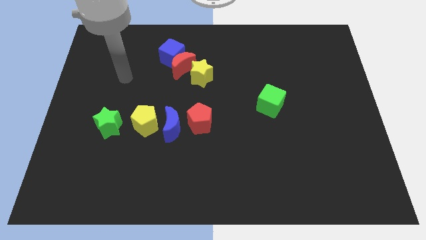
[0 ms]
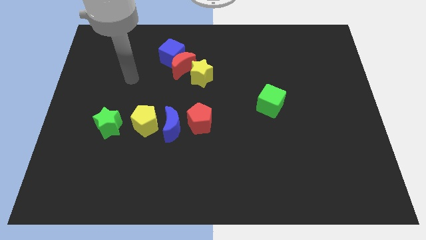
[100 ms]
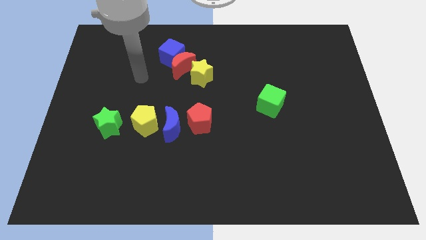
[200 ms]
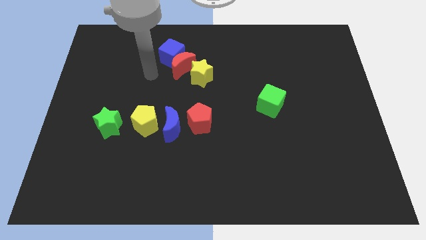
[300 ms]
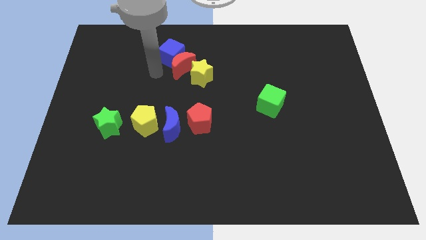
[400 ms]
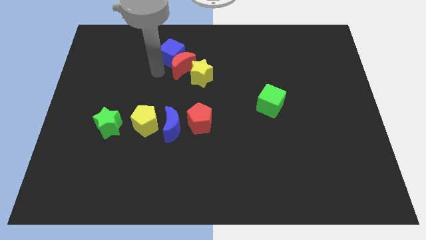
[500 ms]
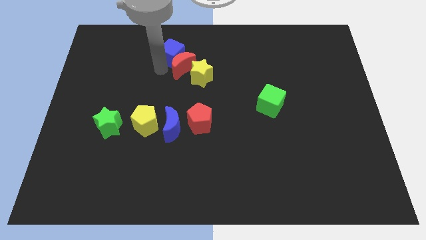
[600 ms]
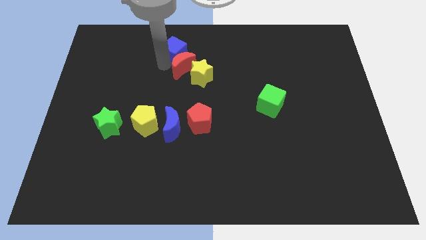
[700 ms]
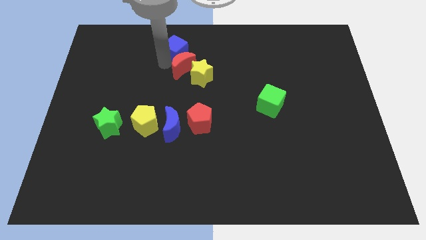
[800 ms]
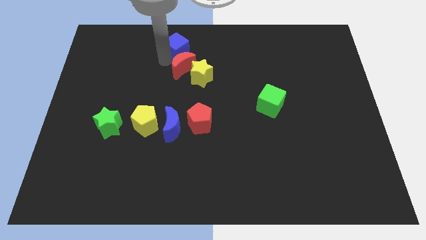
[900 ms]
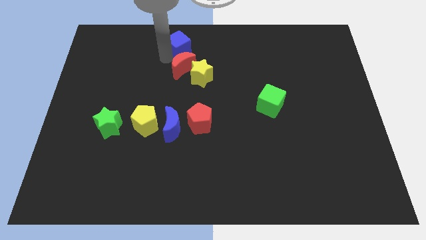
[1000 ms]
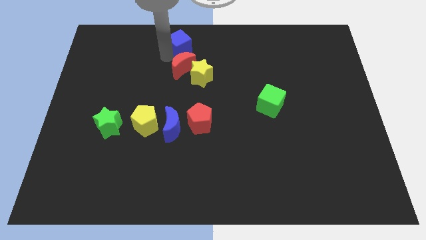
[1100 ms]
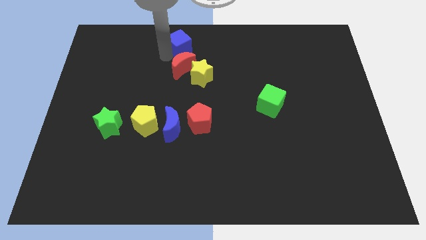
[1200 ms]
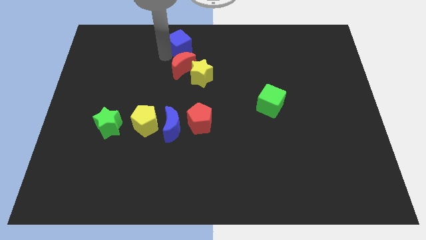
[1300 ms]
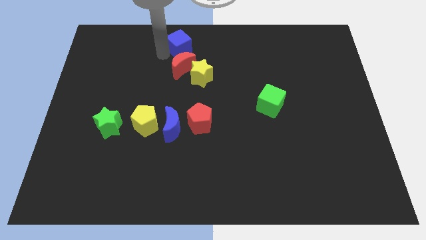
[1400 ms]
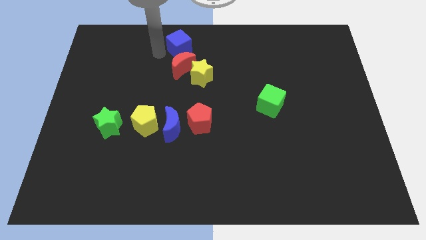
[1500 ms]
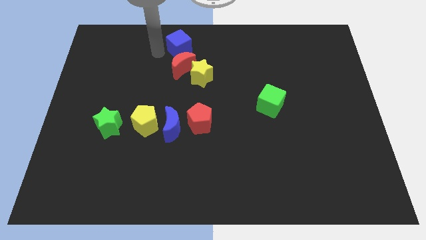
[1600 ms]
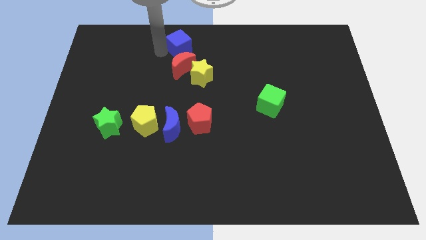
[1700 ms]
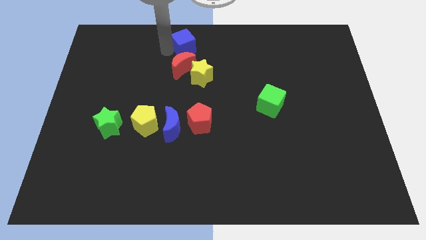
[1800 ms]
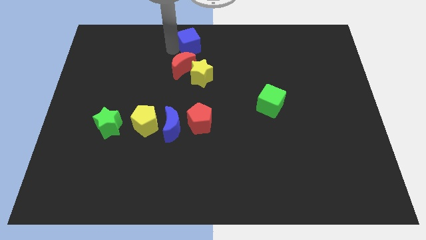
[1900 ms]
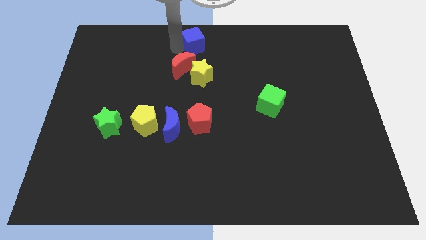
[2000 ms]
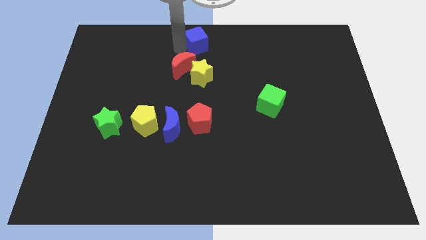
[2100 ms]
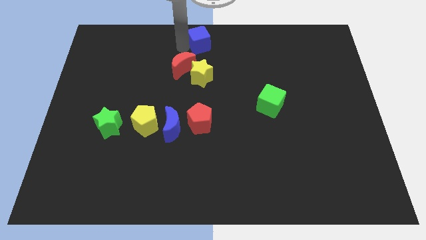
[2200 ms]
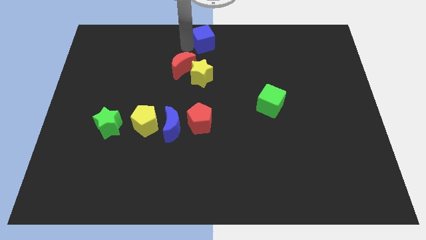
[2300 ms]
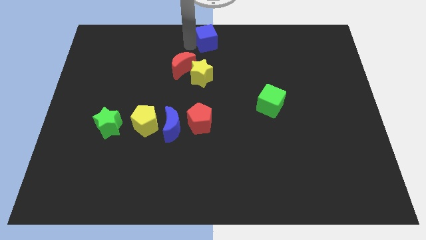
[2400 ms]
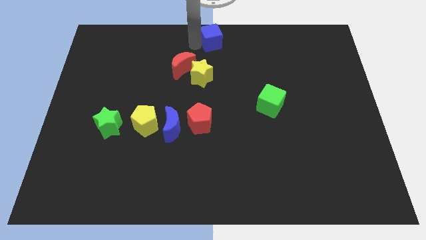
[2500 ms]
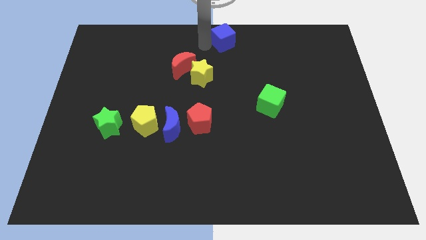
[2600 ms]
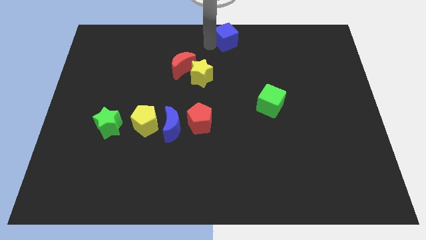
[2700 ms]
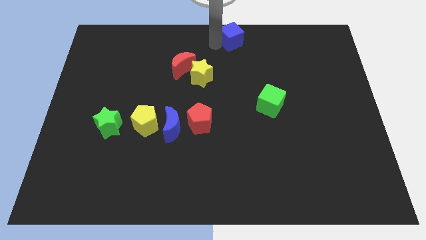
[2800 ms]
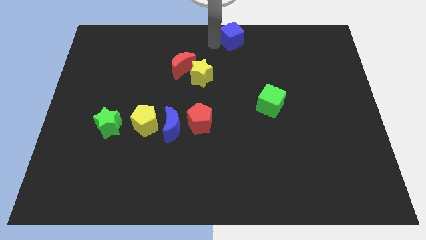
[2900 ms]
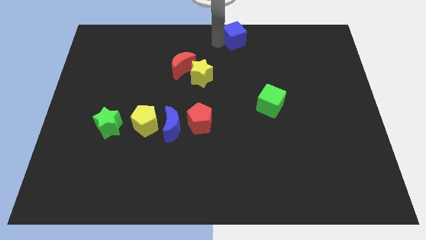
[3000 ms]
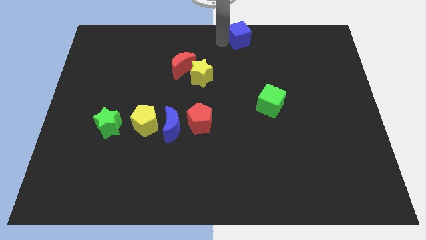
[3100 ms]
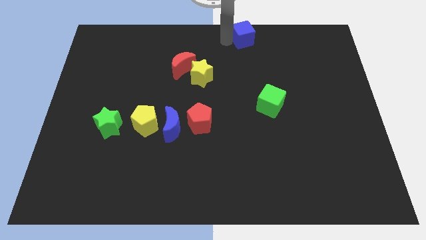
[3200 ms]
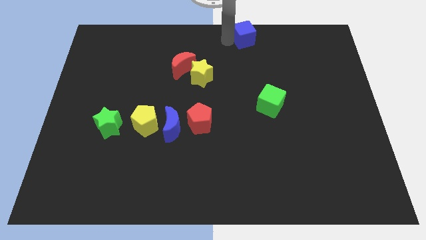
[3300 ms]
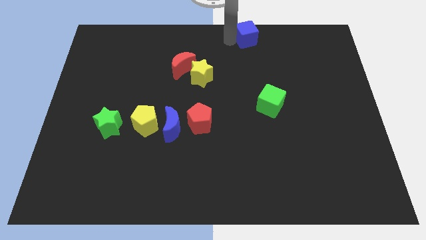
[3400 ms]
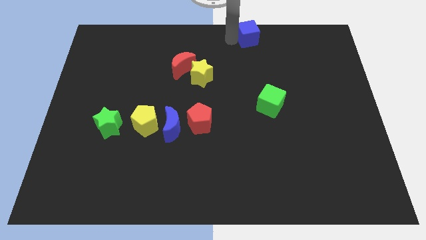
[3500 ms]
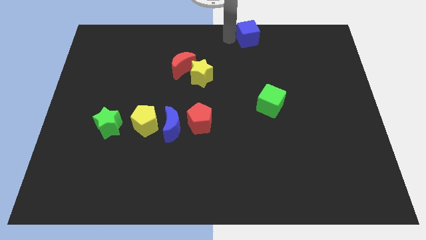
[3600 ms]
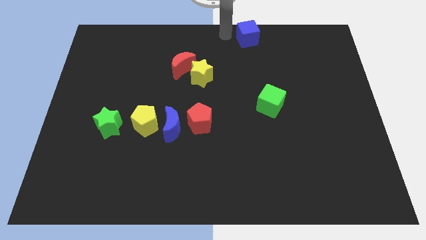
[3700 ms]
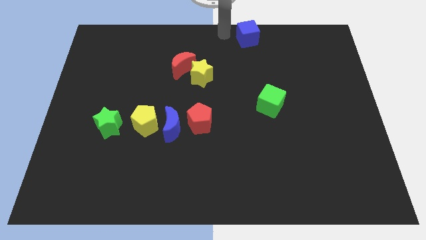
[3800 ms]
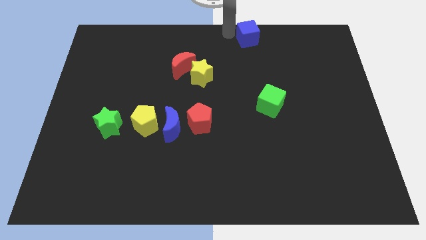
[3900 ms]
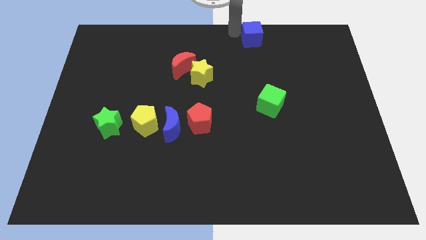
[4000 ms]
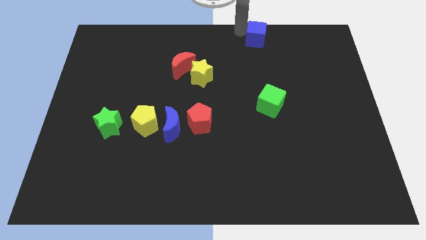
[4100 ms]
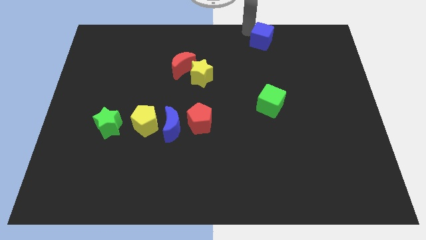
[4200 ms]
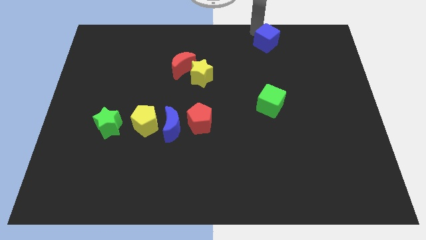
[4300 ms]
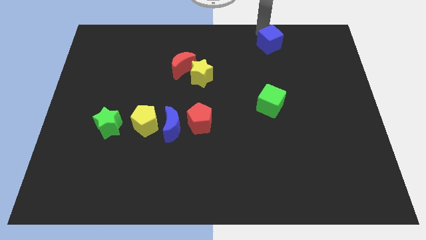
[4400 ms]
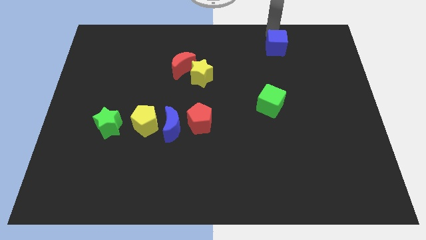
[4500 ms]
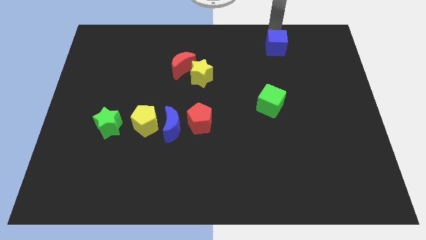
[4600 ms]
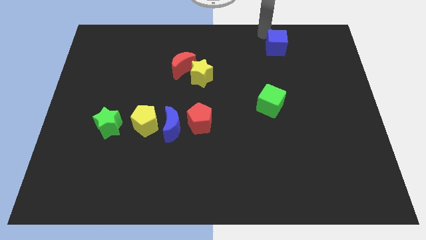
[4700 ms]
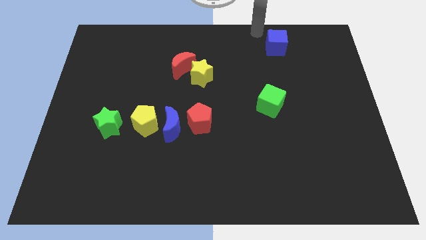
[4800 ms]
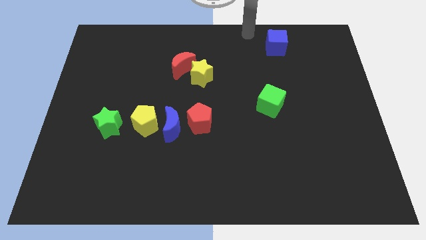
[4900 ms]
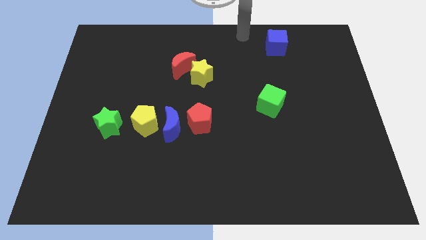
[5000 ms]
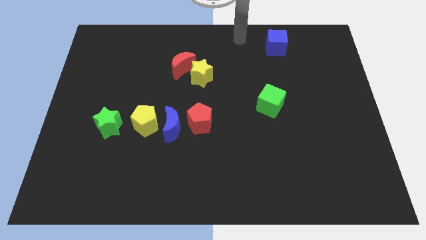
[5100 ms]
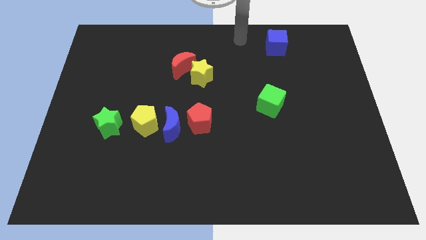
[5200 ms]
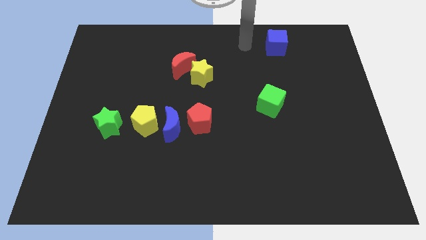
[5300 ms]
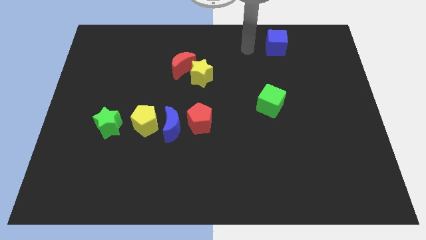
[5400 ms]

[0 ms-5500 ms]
push the blue cube towards the top right

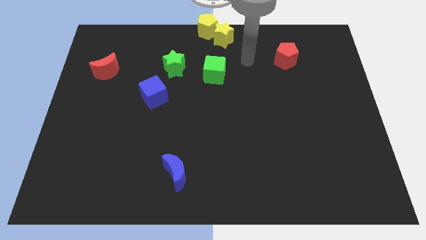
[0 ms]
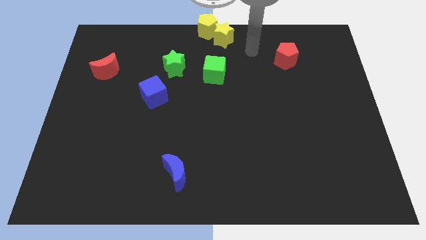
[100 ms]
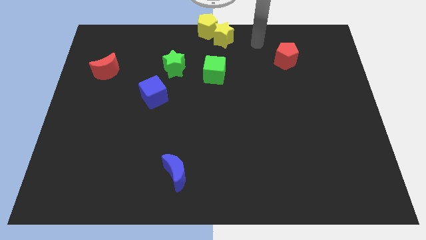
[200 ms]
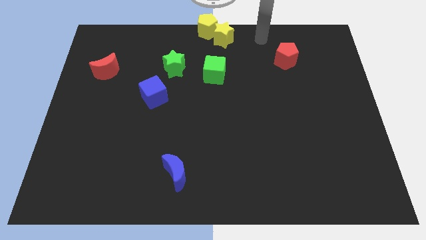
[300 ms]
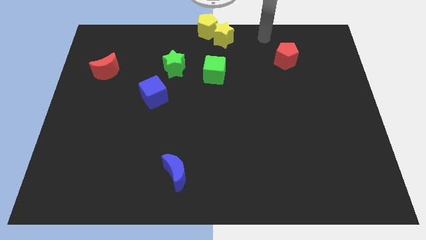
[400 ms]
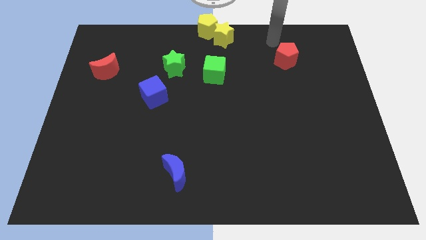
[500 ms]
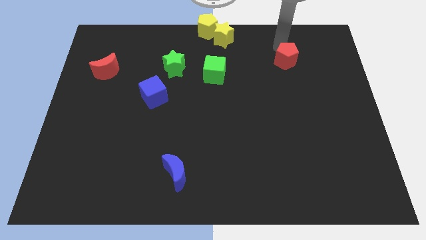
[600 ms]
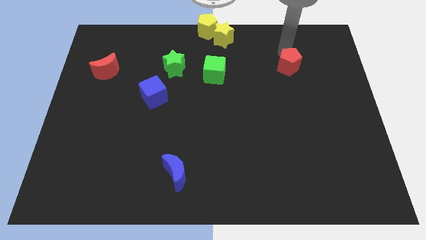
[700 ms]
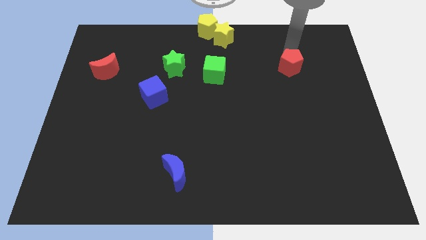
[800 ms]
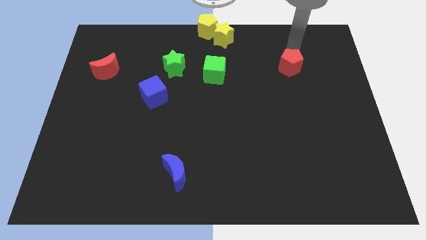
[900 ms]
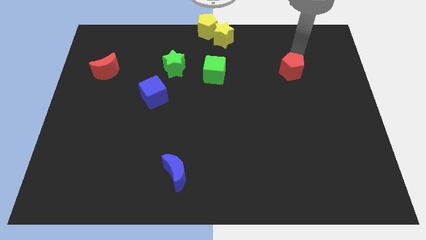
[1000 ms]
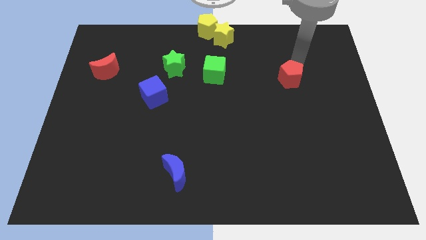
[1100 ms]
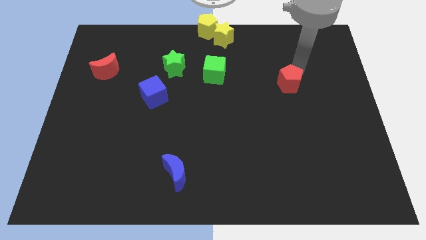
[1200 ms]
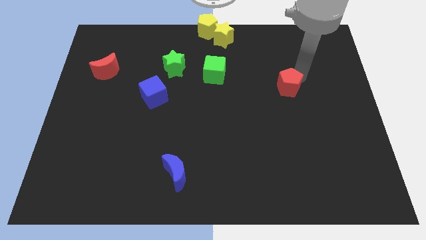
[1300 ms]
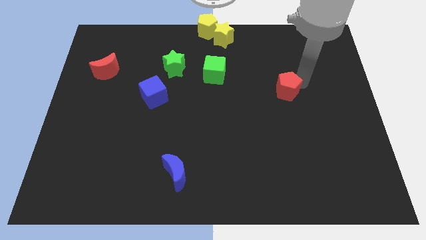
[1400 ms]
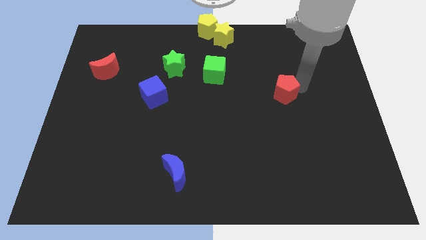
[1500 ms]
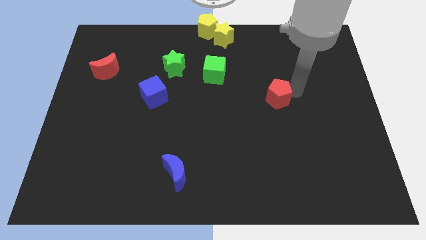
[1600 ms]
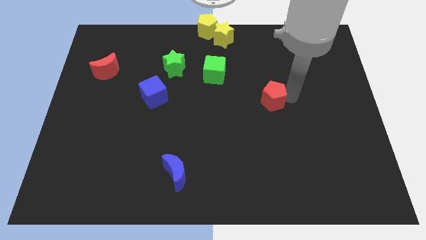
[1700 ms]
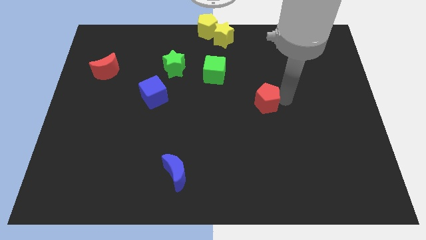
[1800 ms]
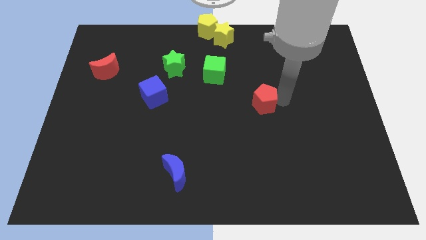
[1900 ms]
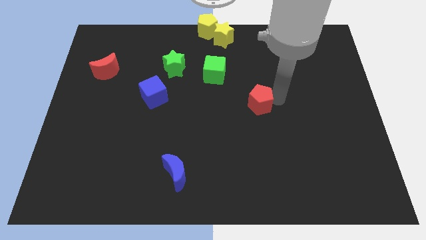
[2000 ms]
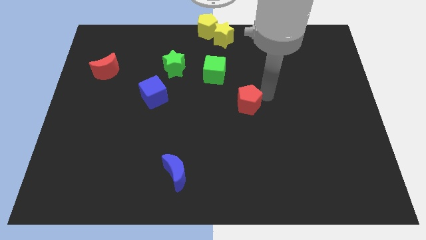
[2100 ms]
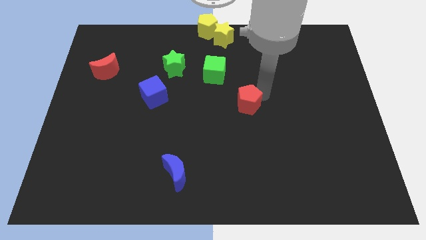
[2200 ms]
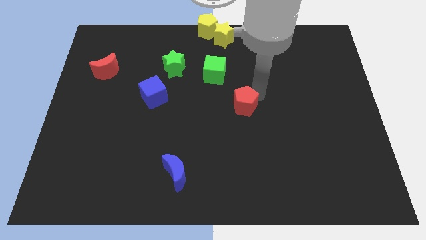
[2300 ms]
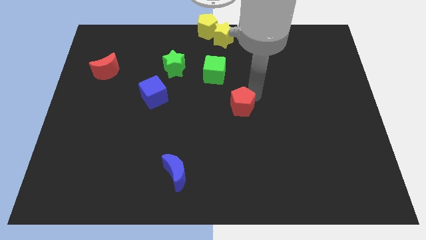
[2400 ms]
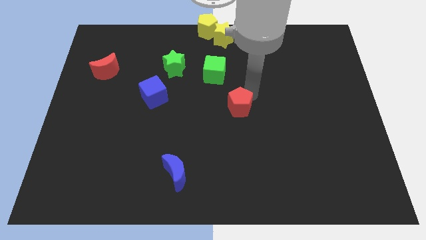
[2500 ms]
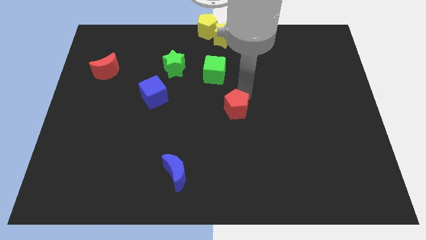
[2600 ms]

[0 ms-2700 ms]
place the red pentagon to the bottom right of the green cube

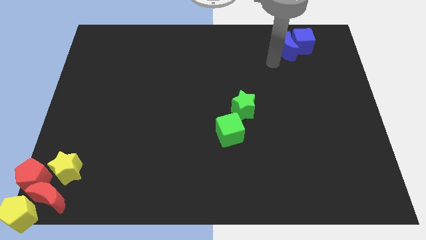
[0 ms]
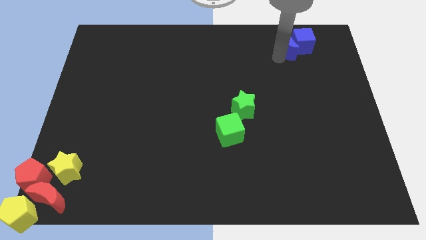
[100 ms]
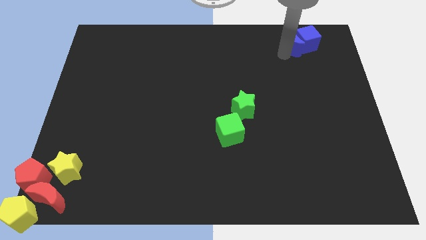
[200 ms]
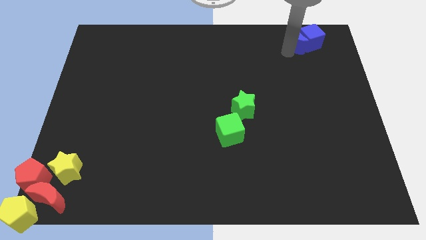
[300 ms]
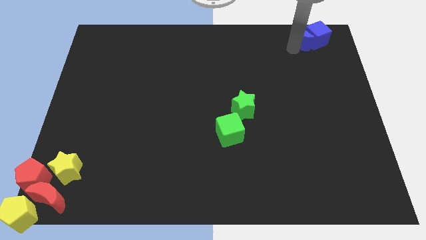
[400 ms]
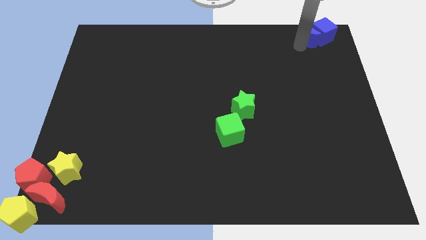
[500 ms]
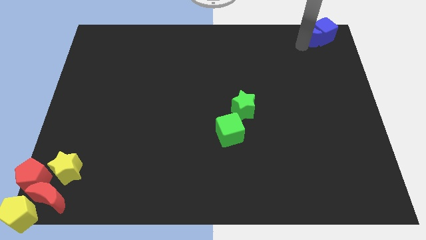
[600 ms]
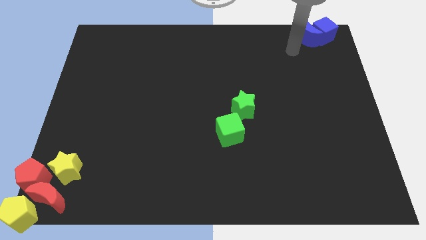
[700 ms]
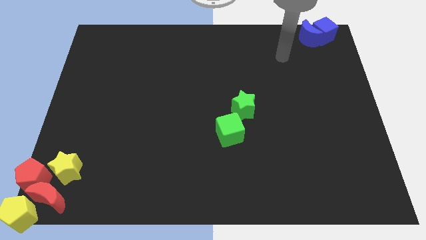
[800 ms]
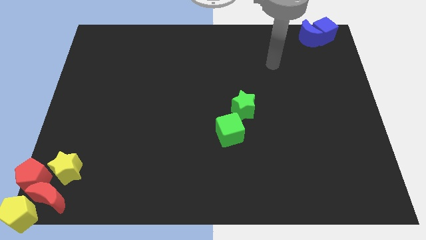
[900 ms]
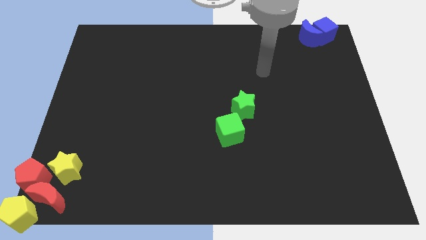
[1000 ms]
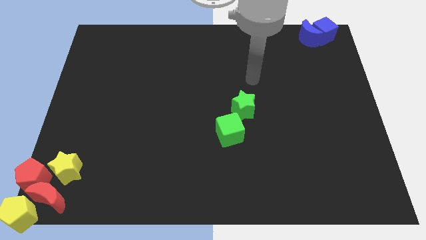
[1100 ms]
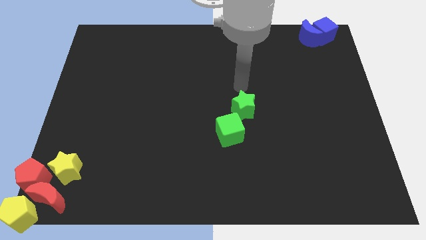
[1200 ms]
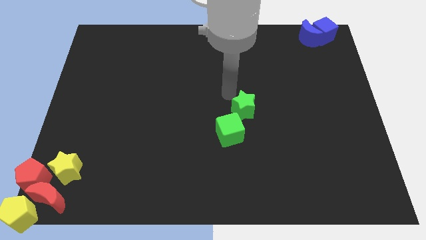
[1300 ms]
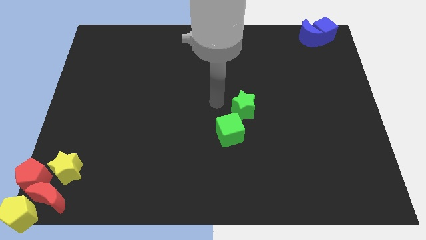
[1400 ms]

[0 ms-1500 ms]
push the blue crescent into the blue cube
